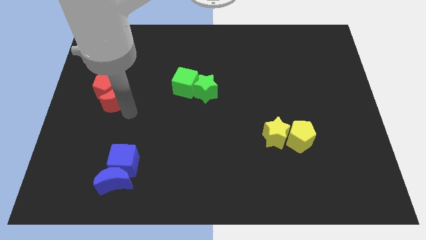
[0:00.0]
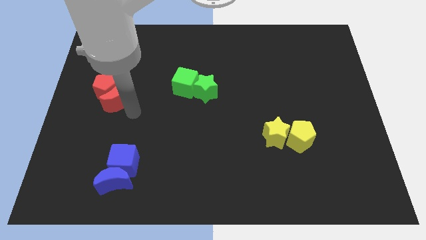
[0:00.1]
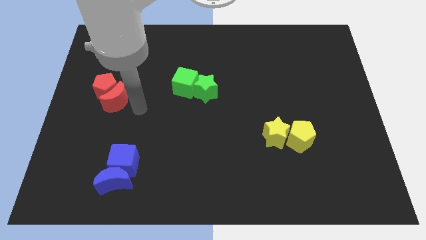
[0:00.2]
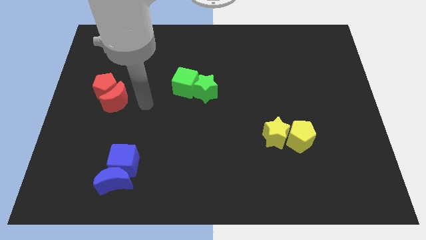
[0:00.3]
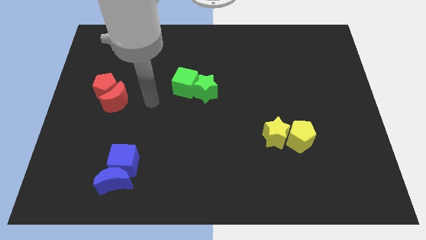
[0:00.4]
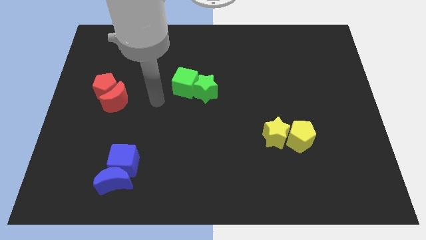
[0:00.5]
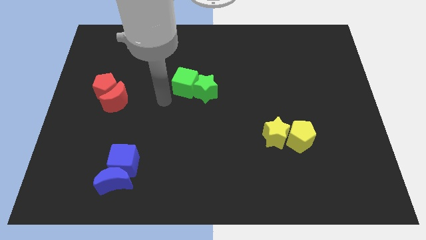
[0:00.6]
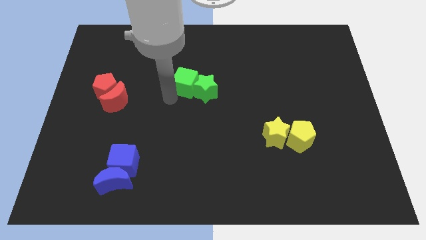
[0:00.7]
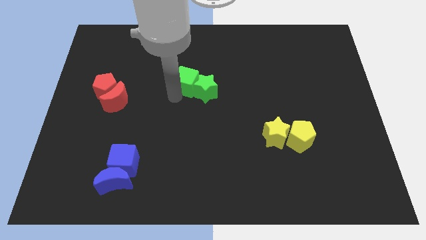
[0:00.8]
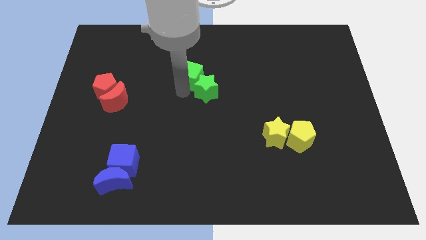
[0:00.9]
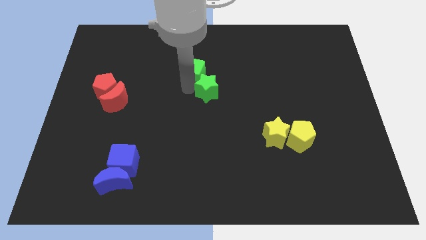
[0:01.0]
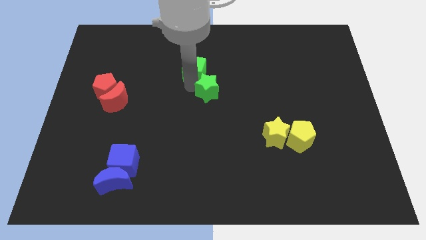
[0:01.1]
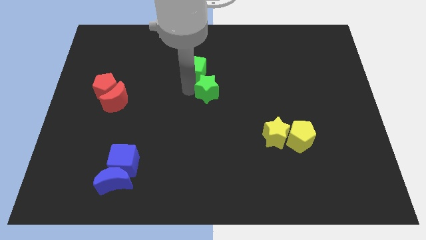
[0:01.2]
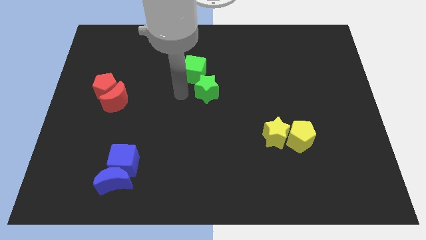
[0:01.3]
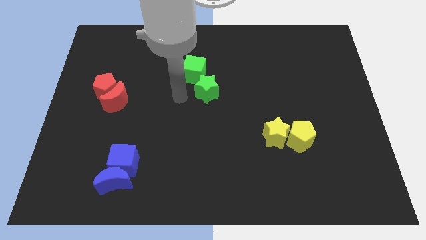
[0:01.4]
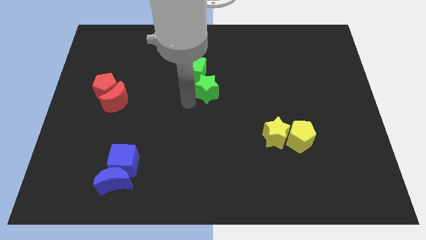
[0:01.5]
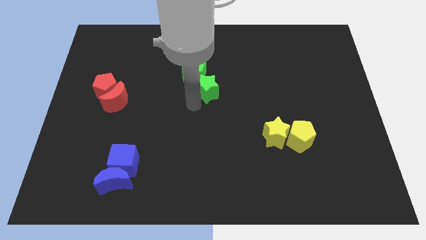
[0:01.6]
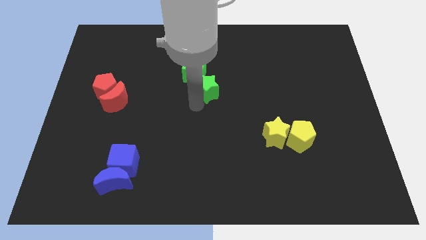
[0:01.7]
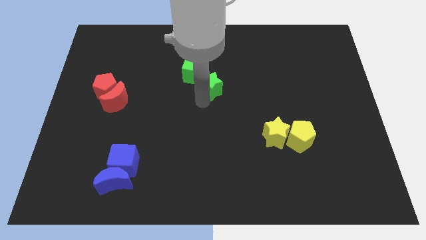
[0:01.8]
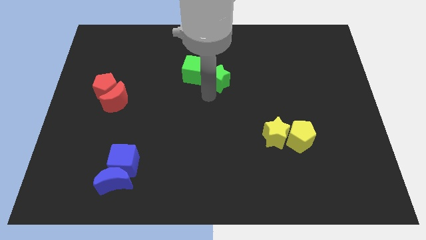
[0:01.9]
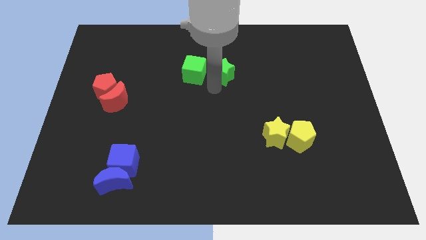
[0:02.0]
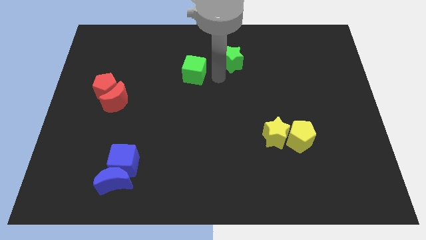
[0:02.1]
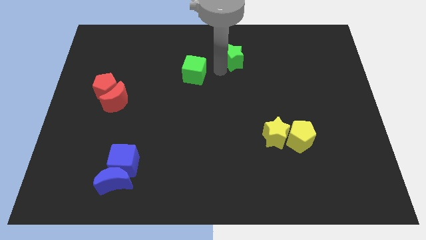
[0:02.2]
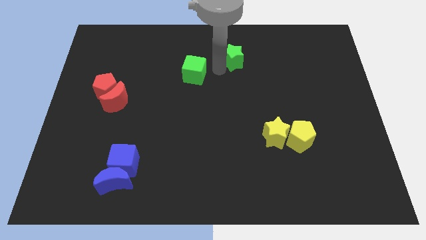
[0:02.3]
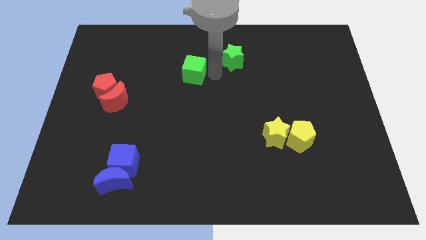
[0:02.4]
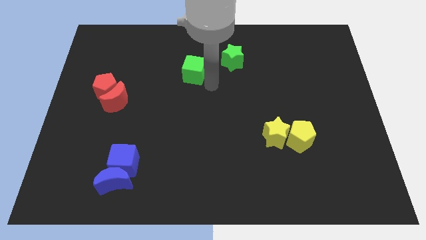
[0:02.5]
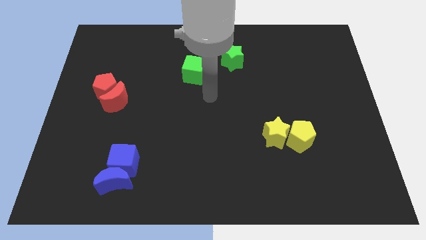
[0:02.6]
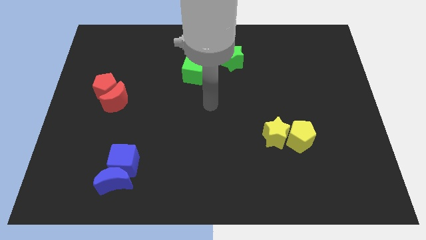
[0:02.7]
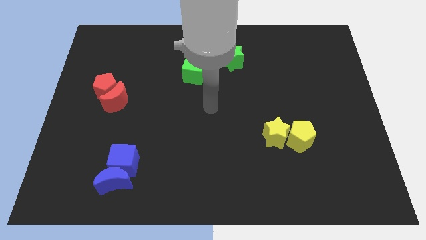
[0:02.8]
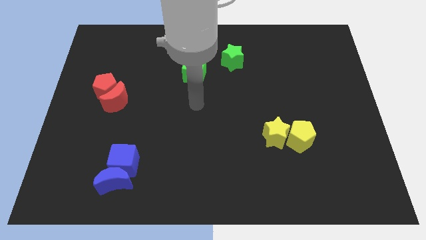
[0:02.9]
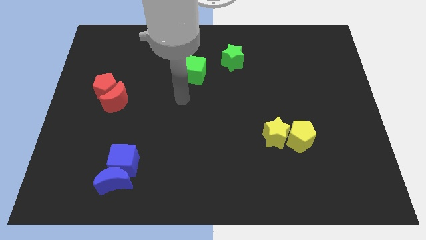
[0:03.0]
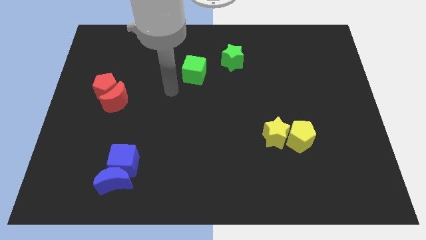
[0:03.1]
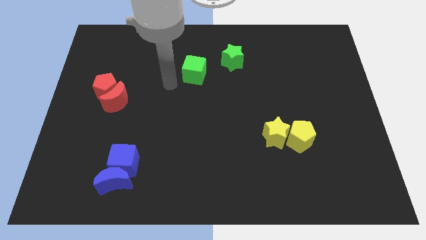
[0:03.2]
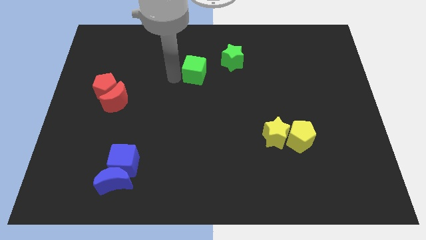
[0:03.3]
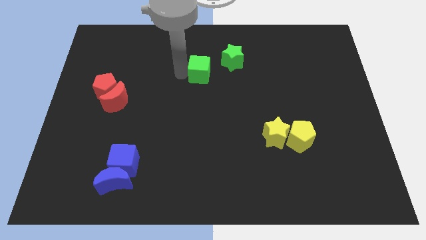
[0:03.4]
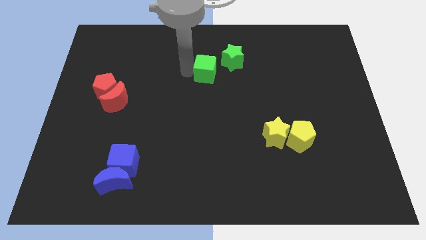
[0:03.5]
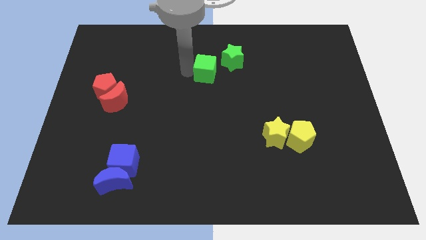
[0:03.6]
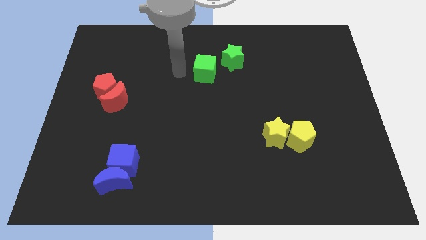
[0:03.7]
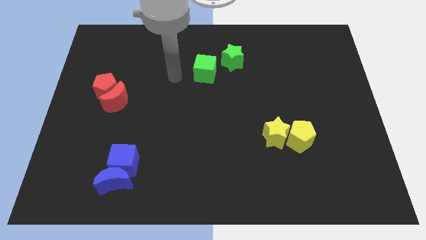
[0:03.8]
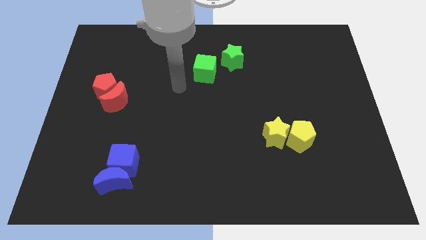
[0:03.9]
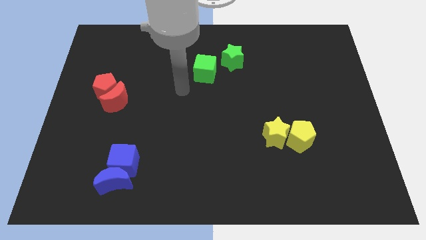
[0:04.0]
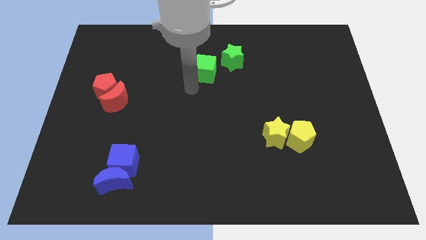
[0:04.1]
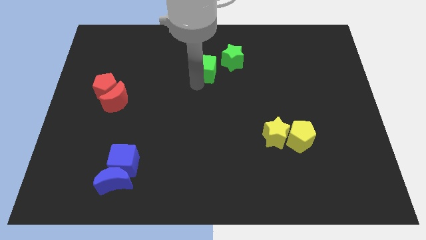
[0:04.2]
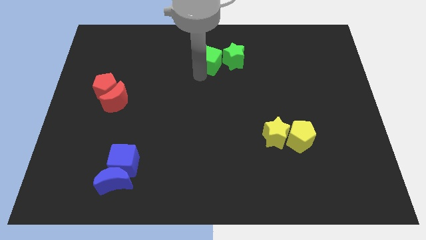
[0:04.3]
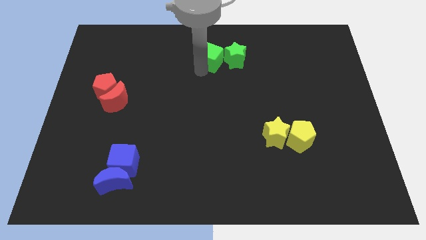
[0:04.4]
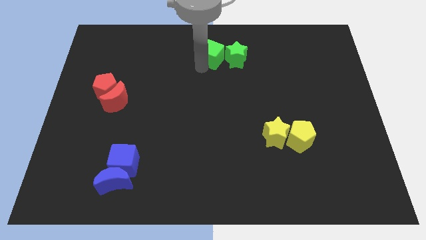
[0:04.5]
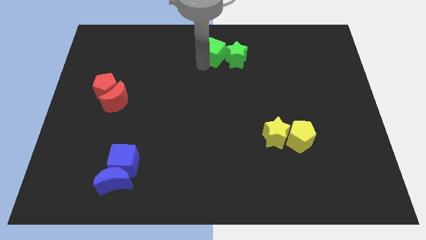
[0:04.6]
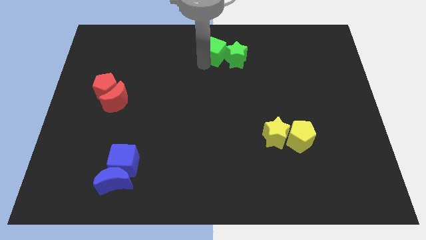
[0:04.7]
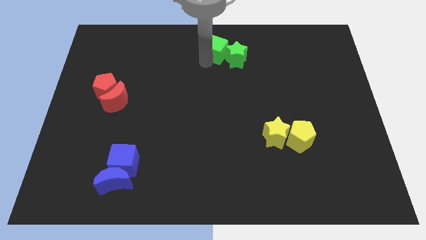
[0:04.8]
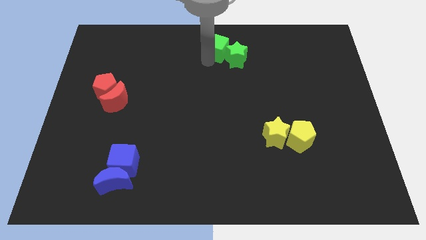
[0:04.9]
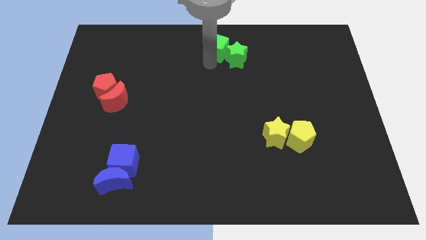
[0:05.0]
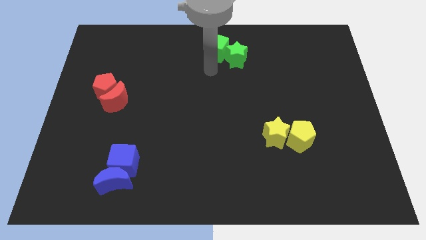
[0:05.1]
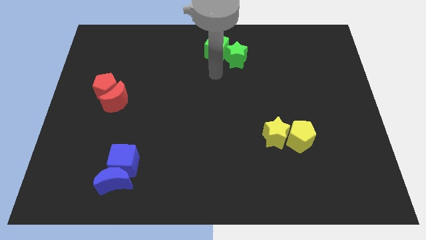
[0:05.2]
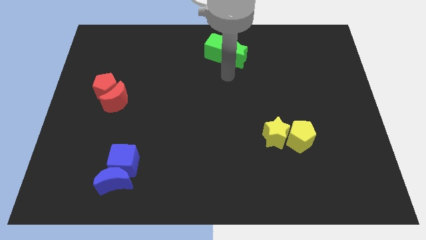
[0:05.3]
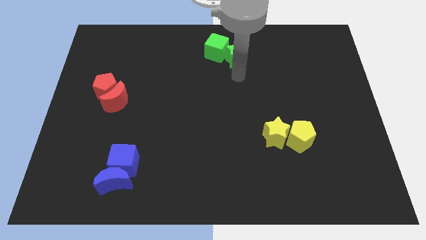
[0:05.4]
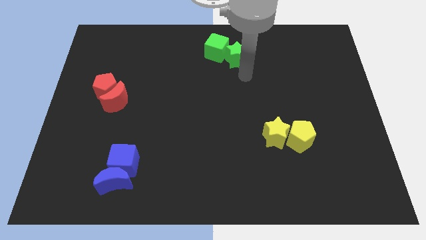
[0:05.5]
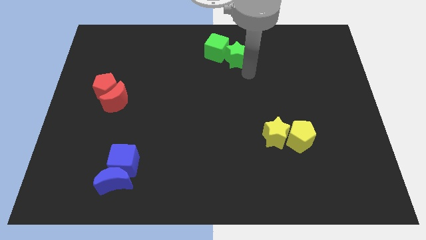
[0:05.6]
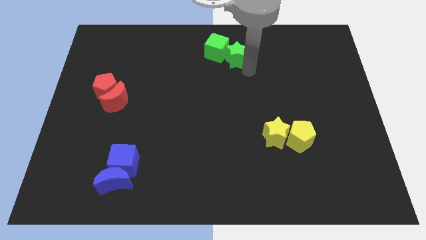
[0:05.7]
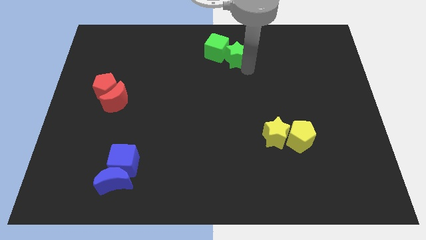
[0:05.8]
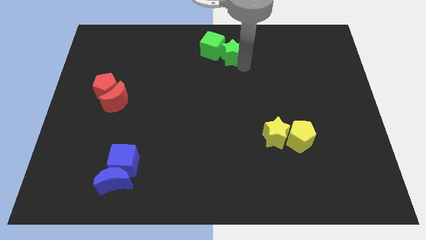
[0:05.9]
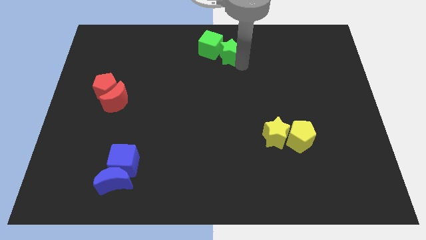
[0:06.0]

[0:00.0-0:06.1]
slide the green cube and green star diagonally to top right side of the red pentagon and red crescent

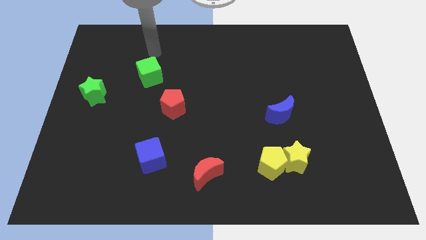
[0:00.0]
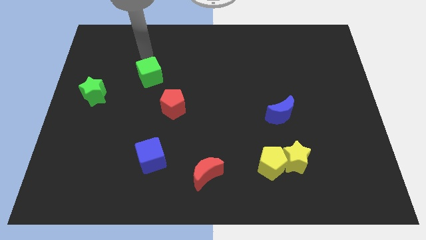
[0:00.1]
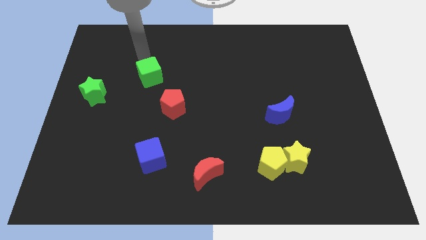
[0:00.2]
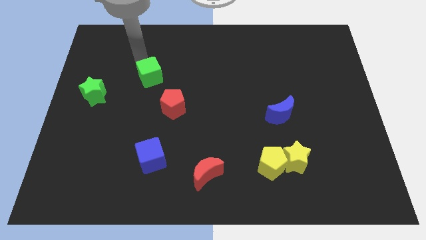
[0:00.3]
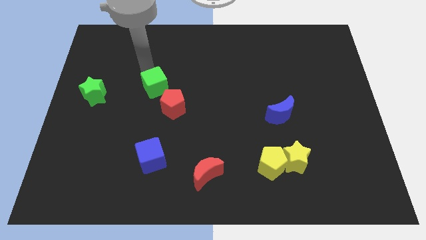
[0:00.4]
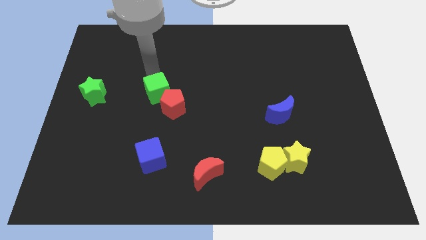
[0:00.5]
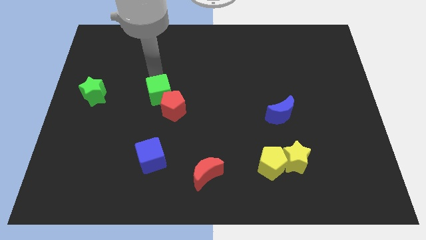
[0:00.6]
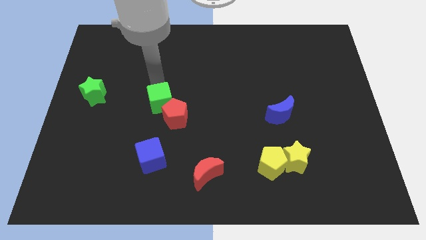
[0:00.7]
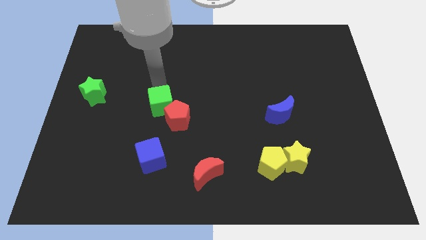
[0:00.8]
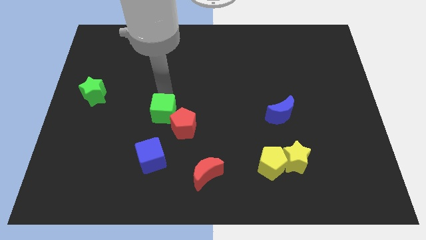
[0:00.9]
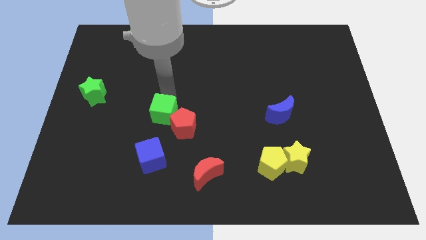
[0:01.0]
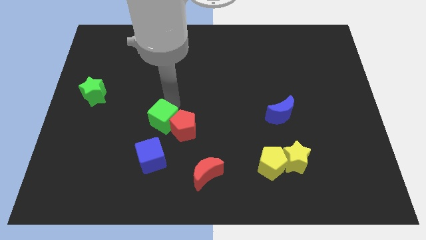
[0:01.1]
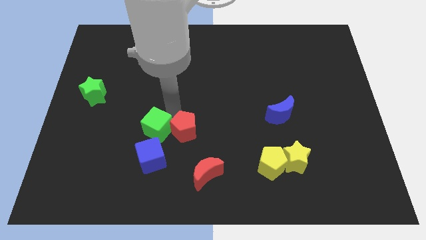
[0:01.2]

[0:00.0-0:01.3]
slide the green cube into the red pentagon

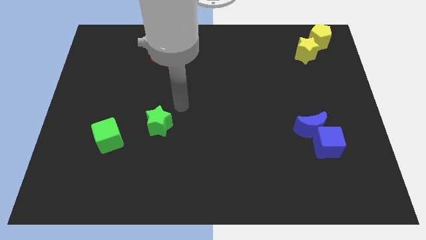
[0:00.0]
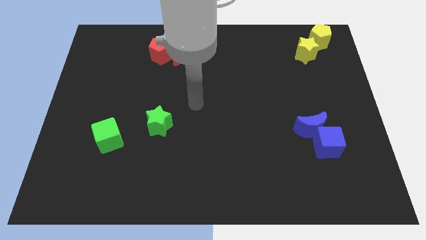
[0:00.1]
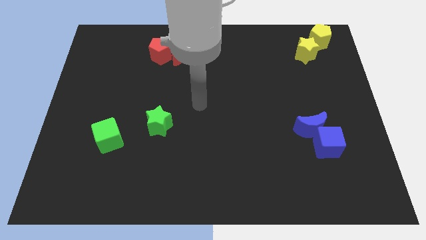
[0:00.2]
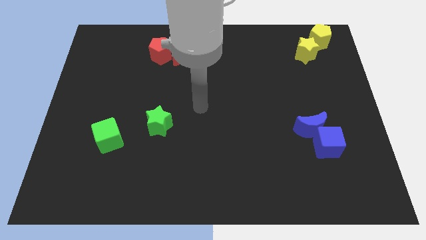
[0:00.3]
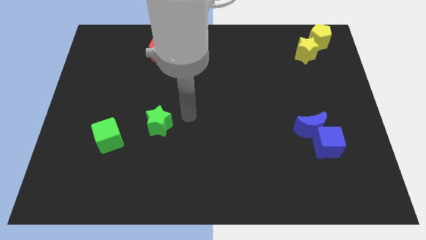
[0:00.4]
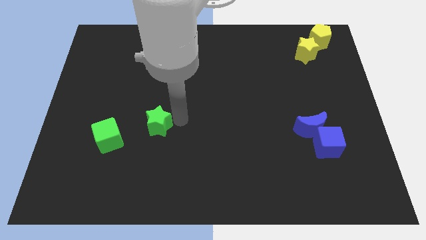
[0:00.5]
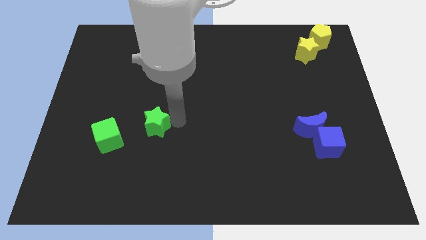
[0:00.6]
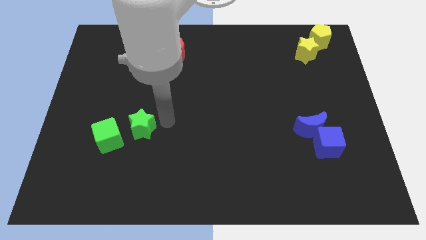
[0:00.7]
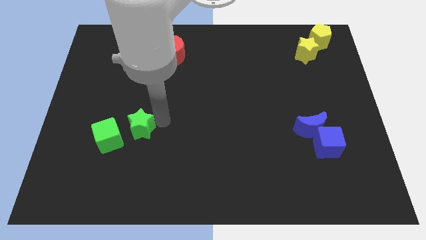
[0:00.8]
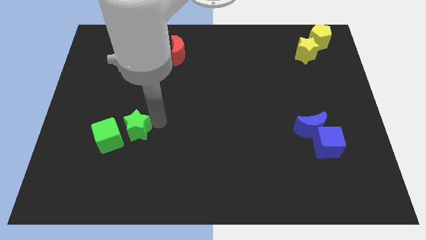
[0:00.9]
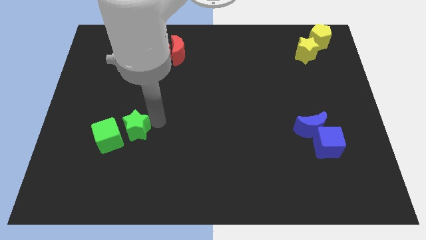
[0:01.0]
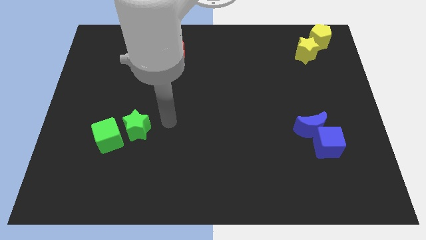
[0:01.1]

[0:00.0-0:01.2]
push the green star to right of the green cube

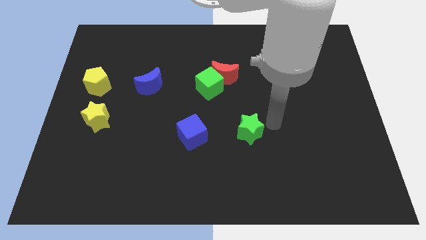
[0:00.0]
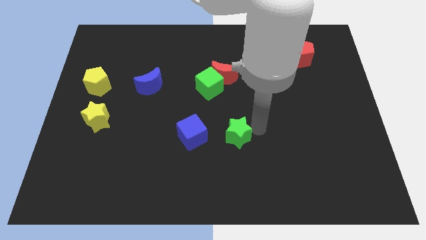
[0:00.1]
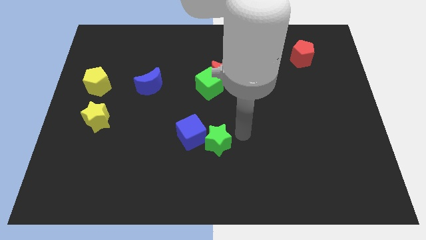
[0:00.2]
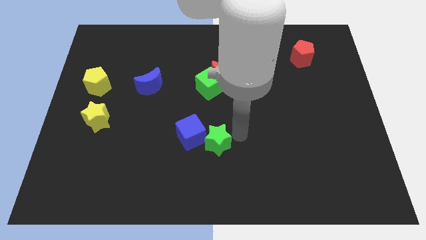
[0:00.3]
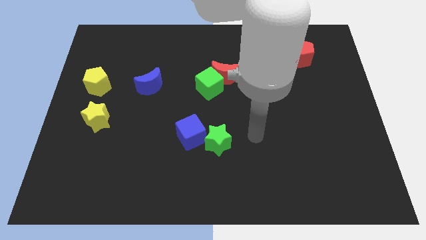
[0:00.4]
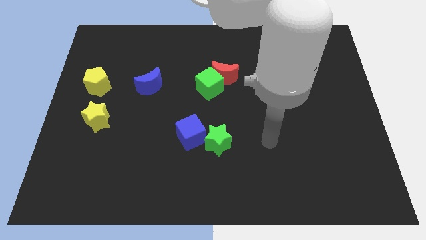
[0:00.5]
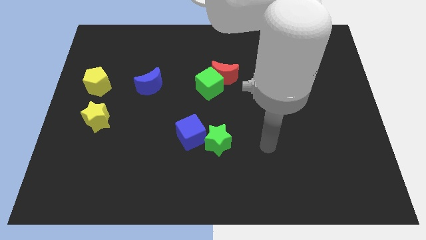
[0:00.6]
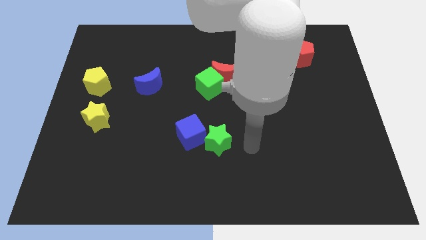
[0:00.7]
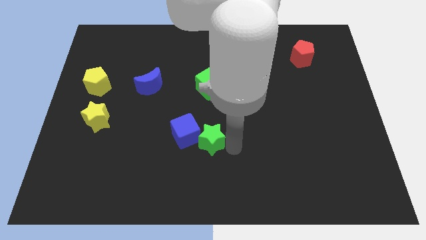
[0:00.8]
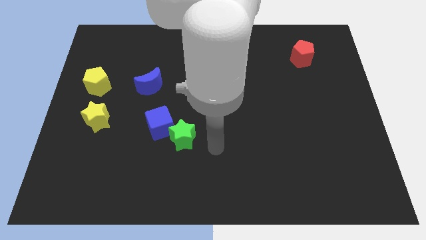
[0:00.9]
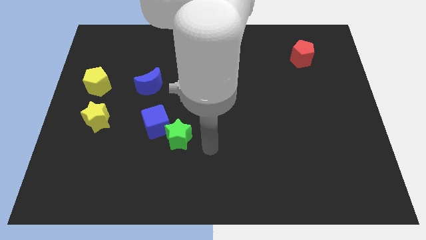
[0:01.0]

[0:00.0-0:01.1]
move green star into blue cube
